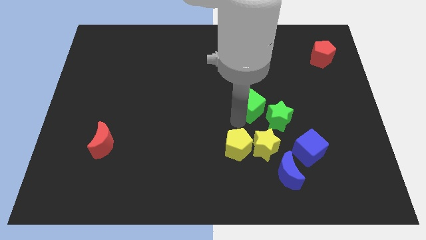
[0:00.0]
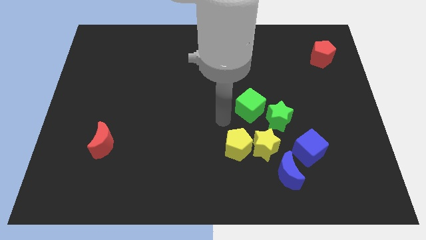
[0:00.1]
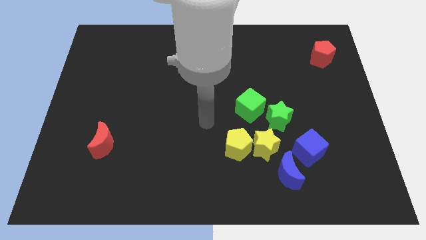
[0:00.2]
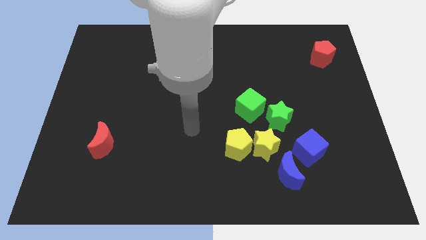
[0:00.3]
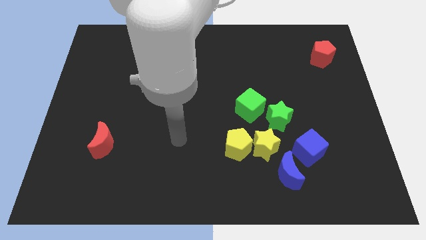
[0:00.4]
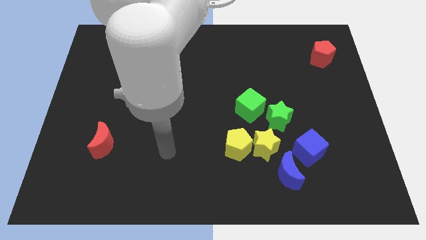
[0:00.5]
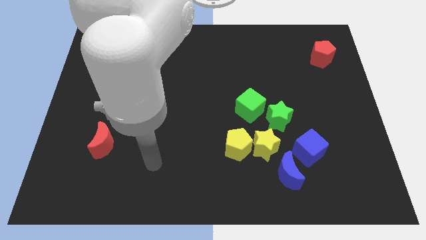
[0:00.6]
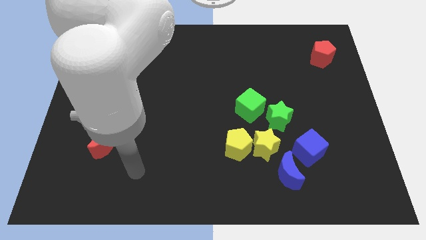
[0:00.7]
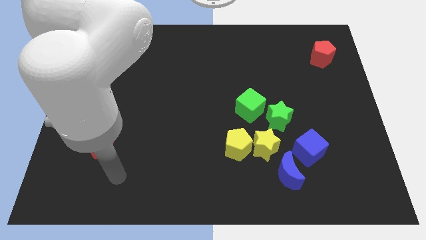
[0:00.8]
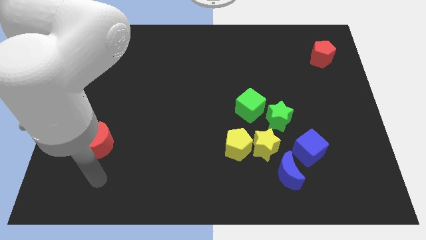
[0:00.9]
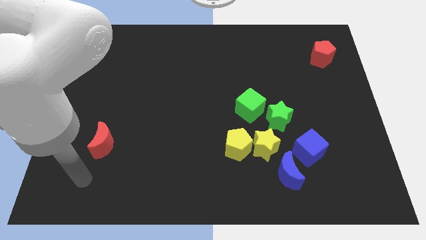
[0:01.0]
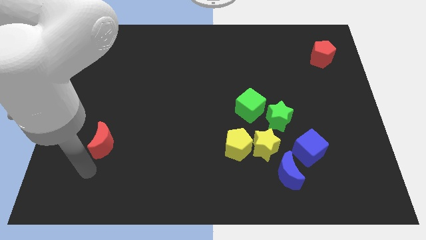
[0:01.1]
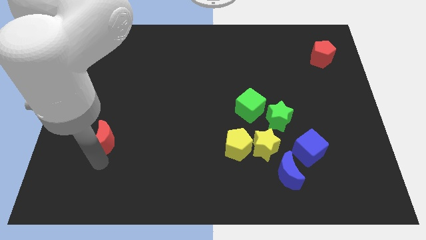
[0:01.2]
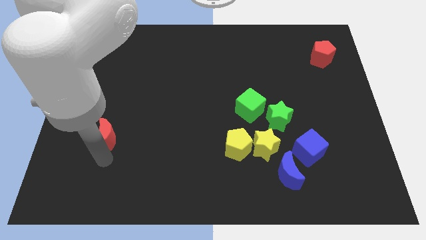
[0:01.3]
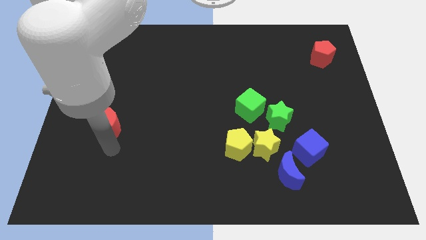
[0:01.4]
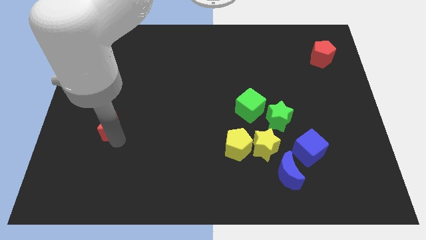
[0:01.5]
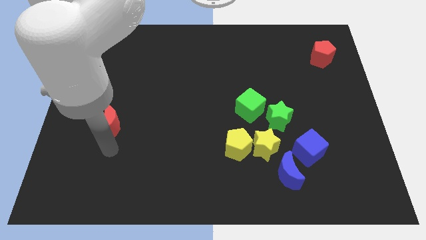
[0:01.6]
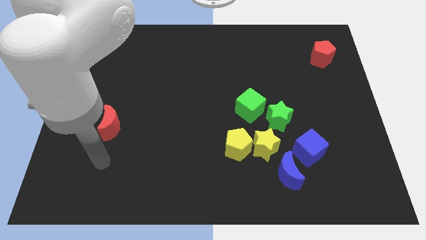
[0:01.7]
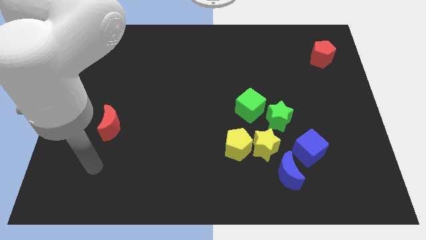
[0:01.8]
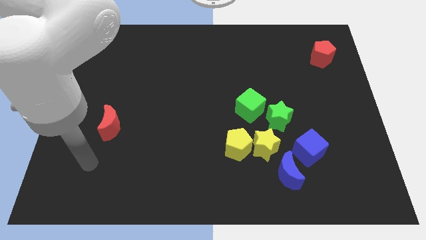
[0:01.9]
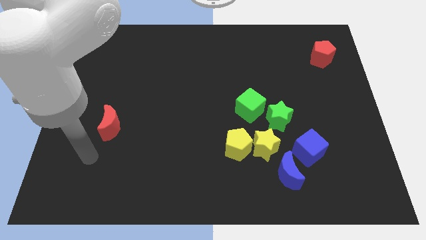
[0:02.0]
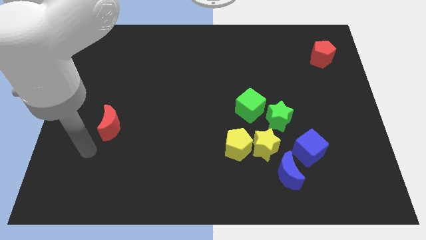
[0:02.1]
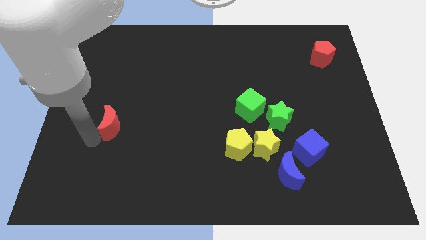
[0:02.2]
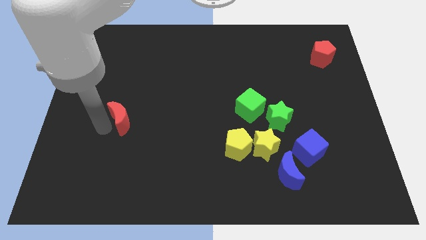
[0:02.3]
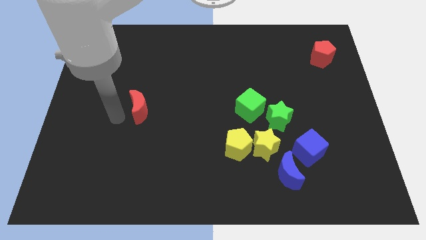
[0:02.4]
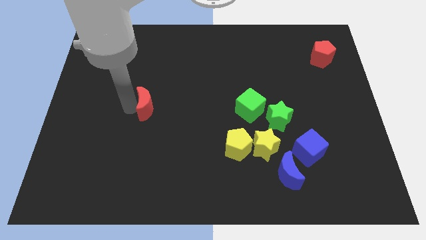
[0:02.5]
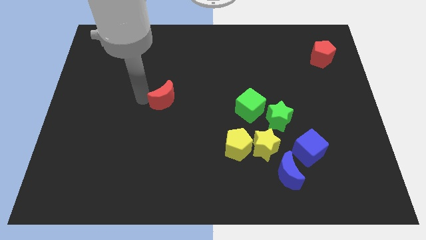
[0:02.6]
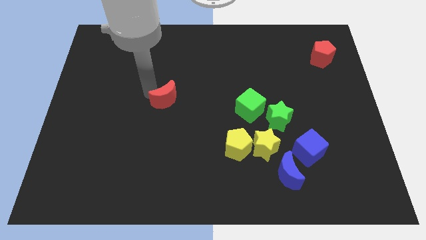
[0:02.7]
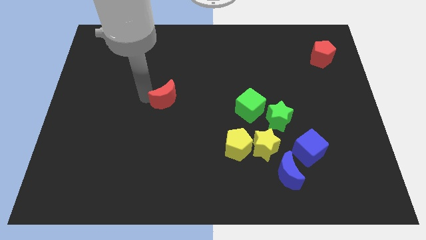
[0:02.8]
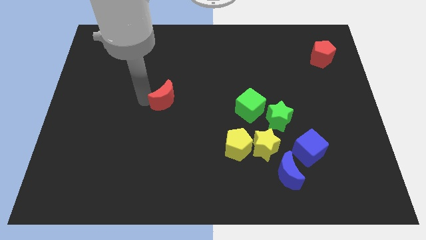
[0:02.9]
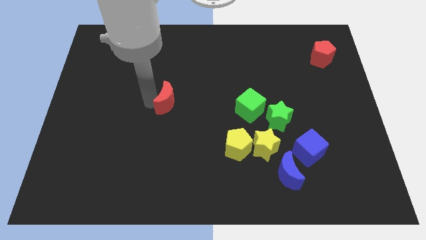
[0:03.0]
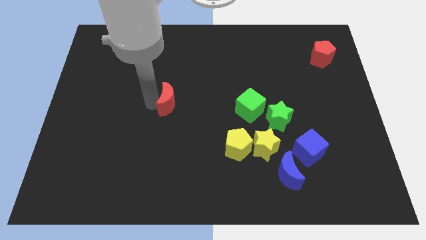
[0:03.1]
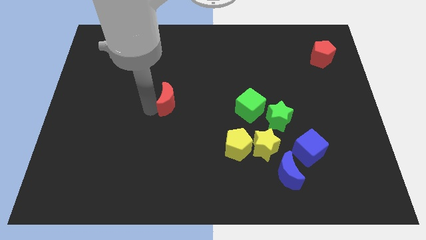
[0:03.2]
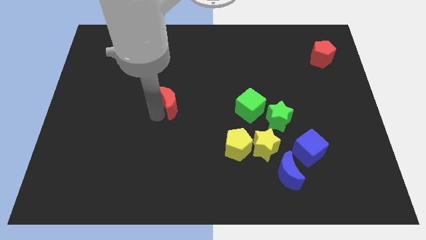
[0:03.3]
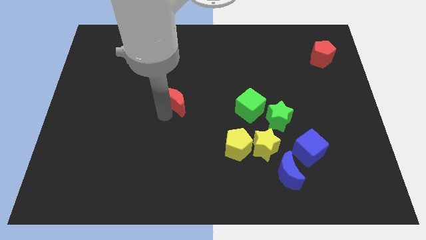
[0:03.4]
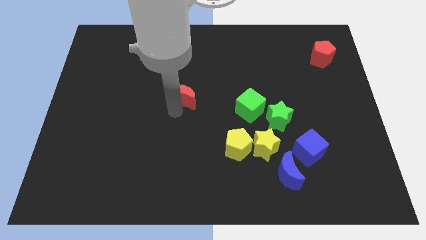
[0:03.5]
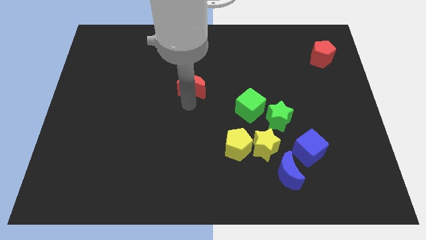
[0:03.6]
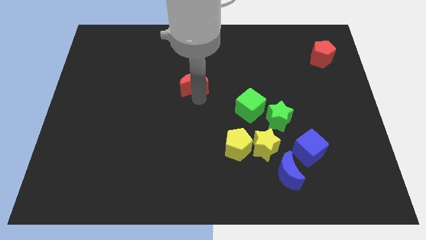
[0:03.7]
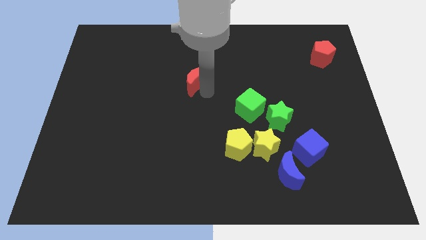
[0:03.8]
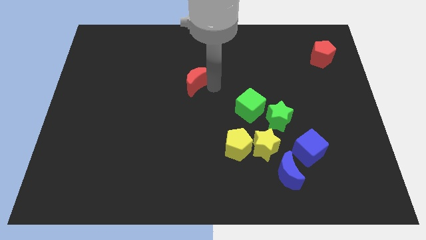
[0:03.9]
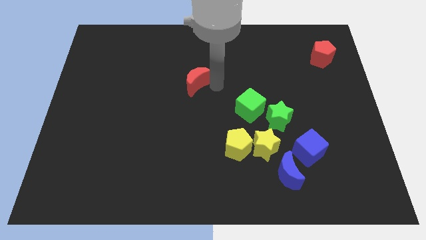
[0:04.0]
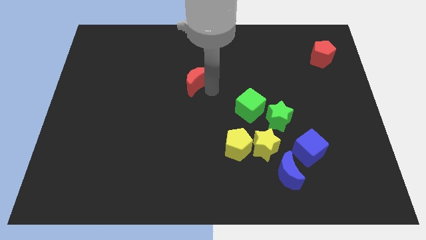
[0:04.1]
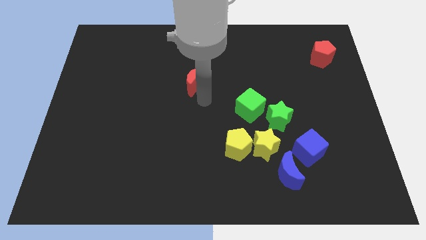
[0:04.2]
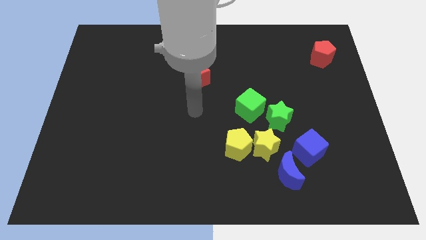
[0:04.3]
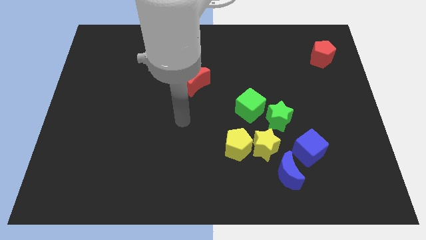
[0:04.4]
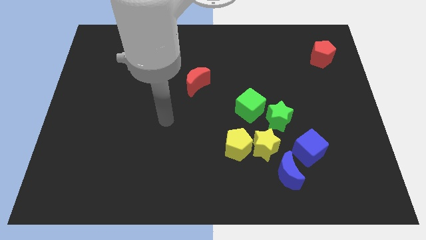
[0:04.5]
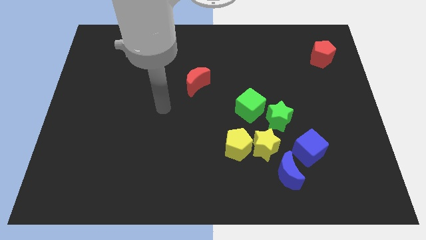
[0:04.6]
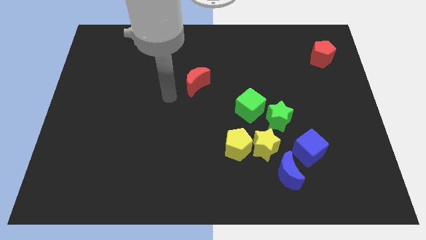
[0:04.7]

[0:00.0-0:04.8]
move the red moon towards the center of the board

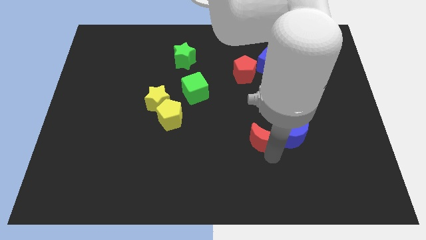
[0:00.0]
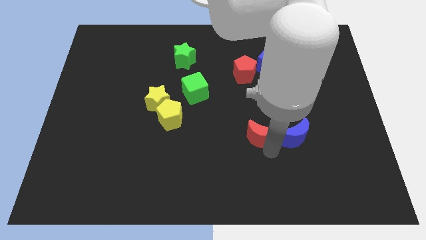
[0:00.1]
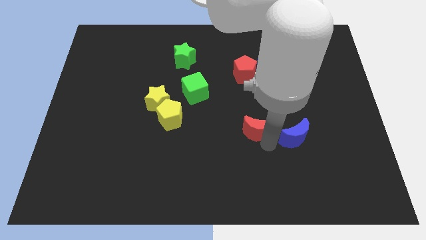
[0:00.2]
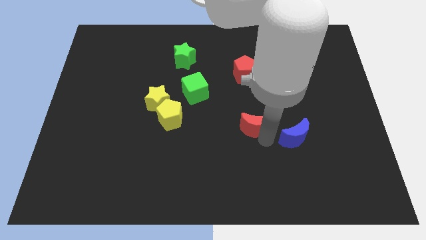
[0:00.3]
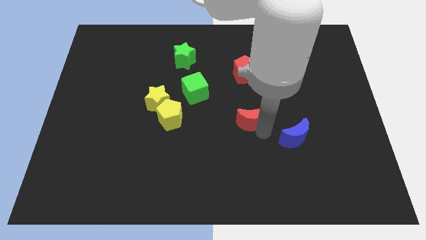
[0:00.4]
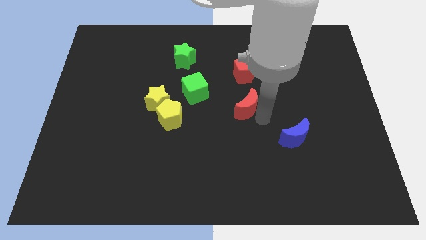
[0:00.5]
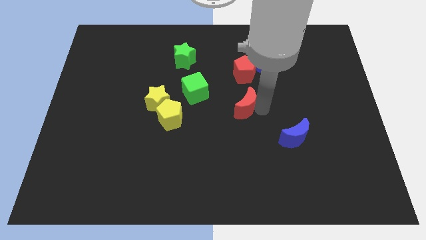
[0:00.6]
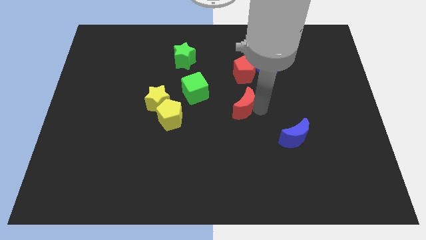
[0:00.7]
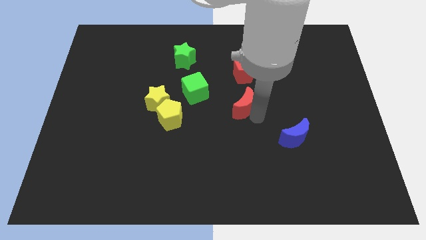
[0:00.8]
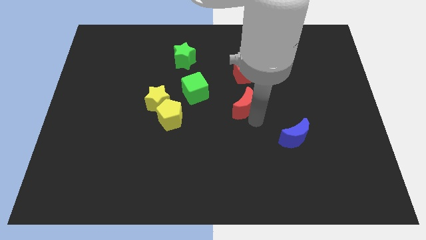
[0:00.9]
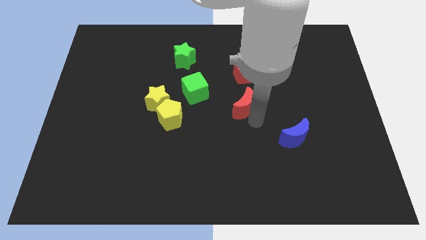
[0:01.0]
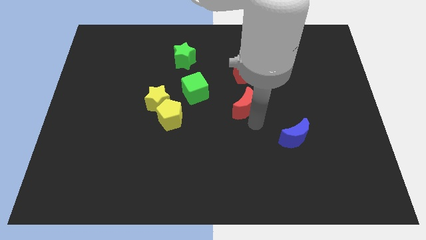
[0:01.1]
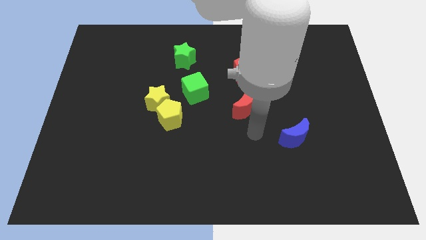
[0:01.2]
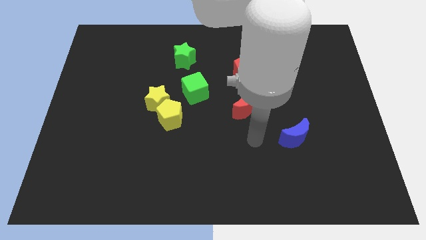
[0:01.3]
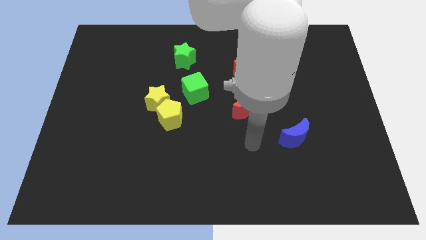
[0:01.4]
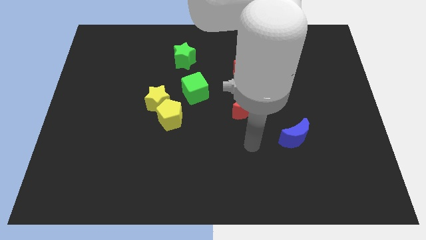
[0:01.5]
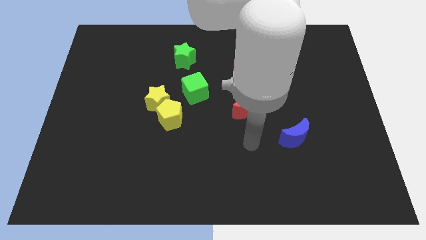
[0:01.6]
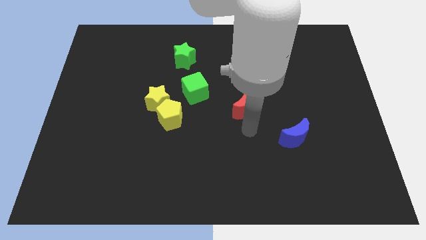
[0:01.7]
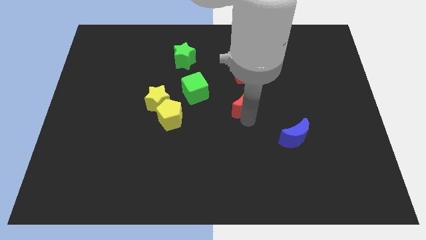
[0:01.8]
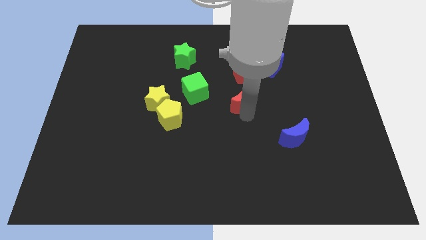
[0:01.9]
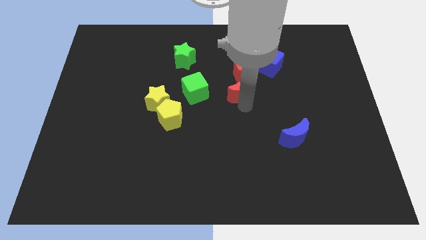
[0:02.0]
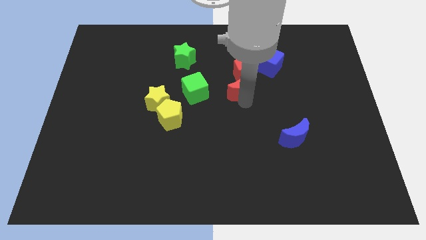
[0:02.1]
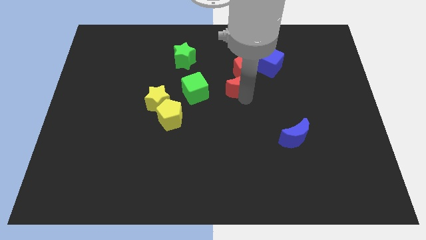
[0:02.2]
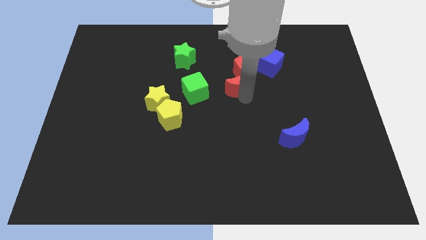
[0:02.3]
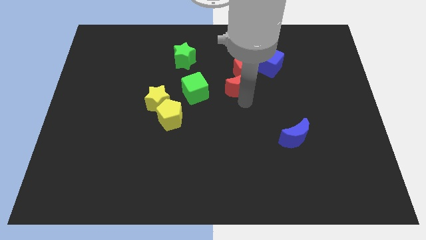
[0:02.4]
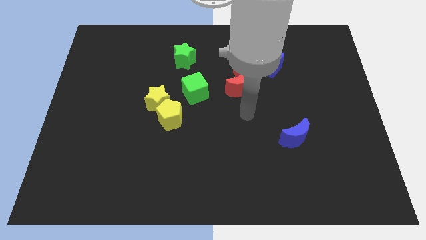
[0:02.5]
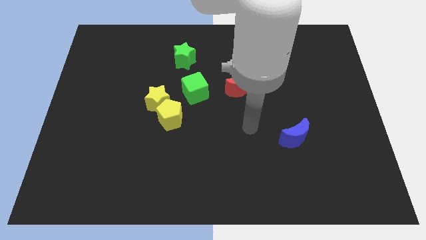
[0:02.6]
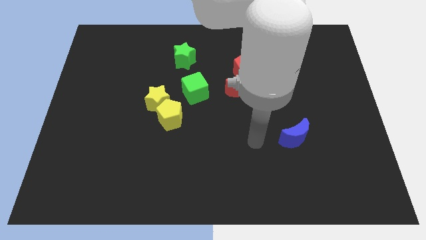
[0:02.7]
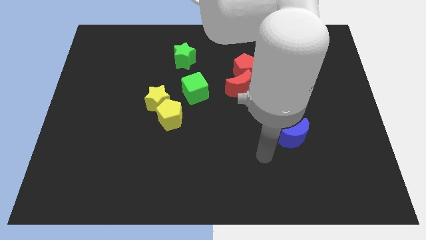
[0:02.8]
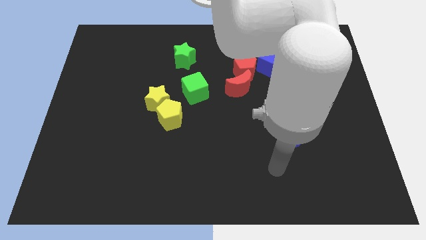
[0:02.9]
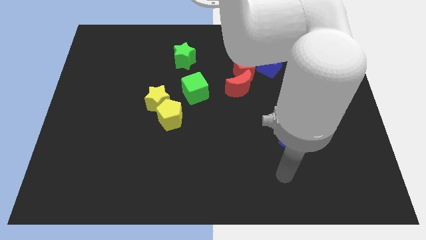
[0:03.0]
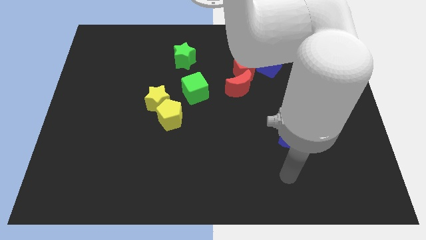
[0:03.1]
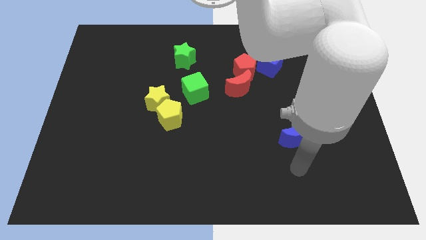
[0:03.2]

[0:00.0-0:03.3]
place the red crescent below the red pentagon

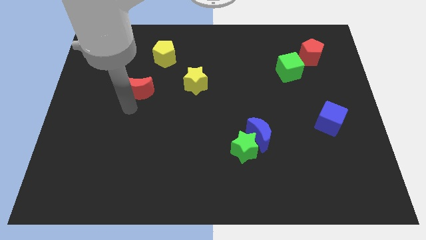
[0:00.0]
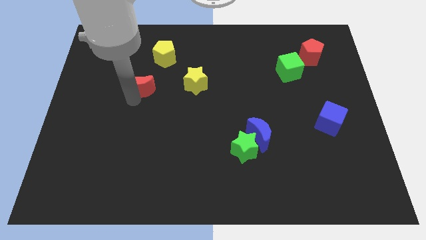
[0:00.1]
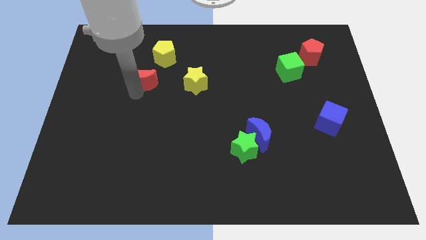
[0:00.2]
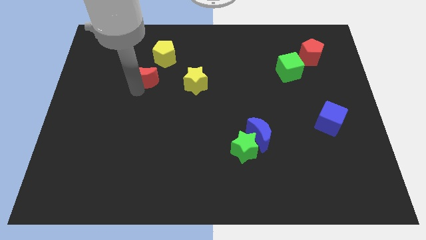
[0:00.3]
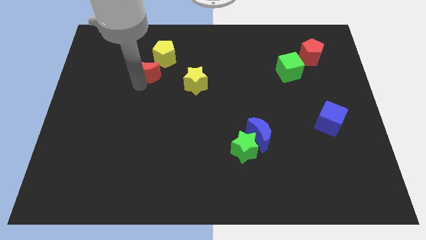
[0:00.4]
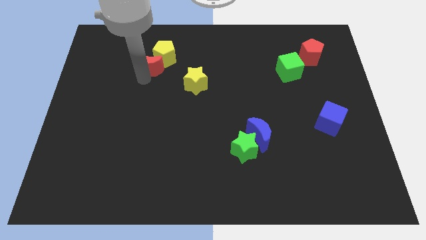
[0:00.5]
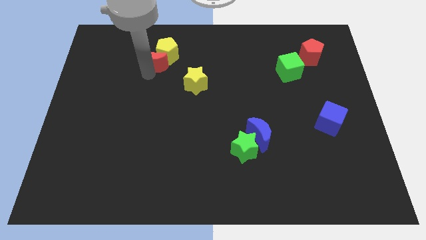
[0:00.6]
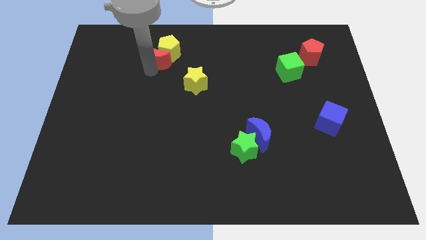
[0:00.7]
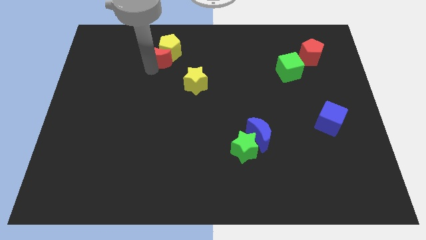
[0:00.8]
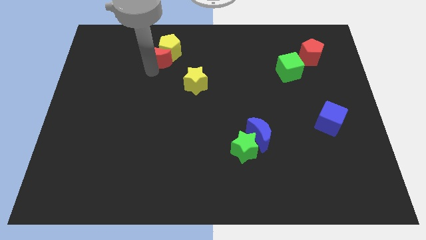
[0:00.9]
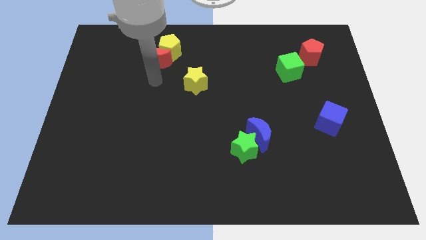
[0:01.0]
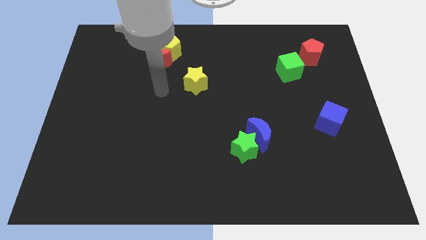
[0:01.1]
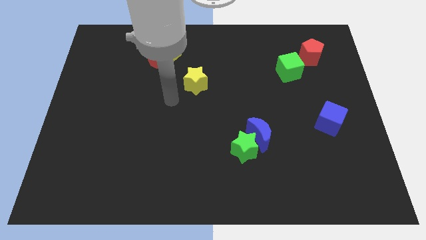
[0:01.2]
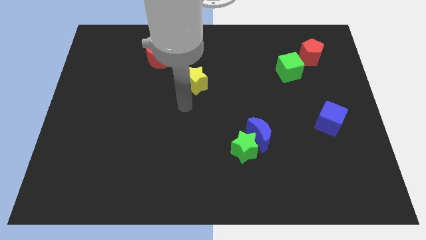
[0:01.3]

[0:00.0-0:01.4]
push the red moon and yellow pentagon towards the top side
